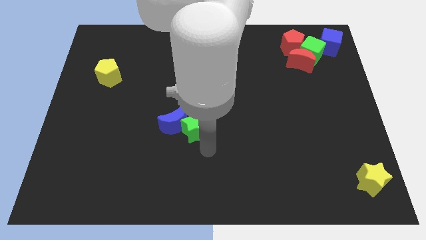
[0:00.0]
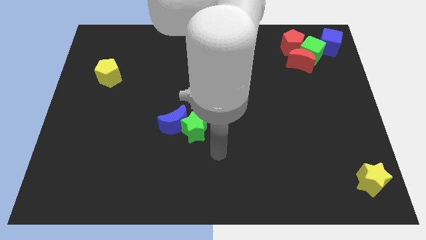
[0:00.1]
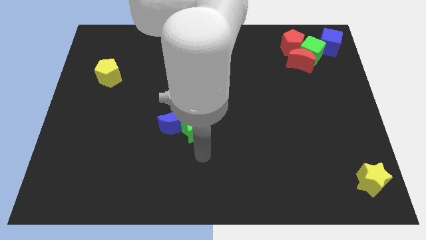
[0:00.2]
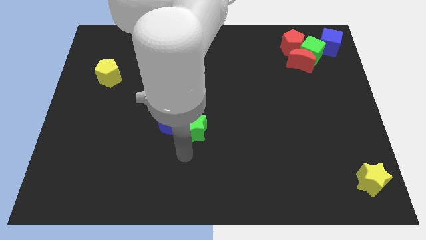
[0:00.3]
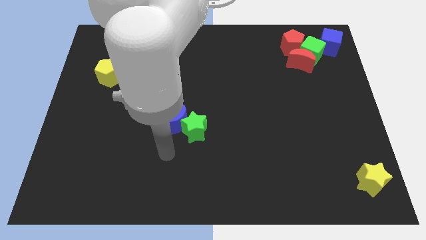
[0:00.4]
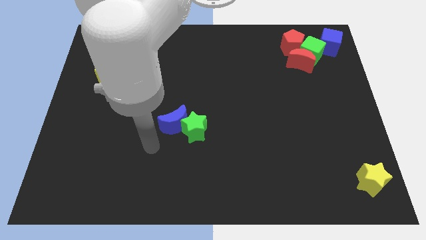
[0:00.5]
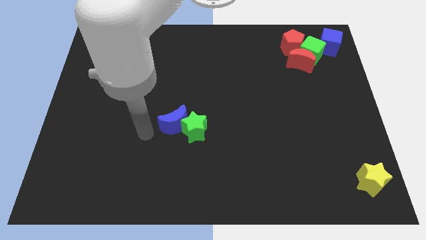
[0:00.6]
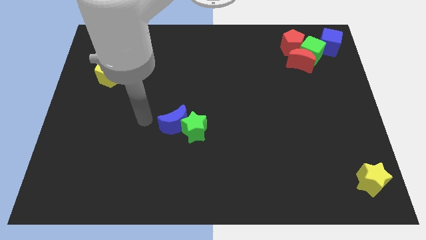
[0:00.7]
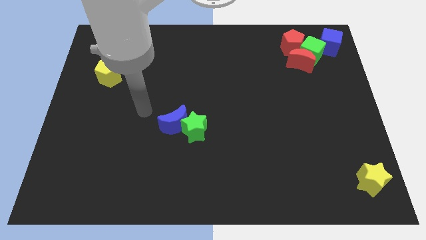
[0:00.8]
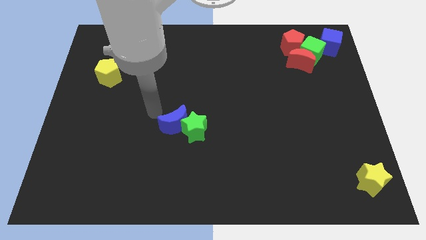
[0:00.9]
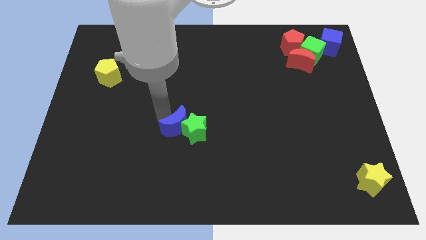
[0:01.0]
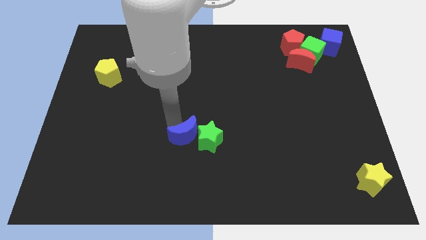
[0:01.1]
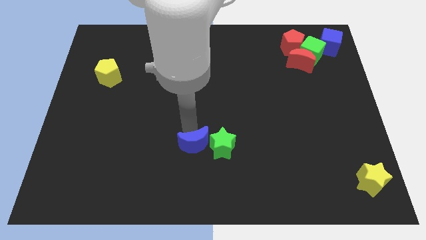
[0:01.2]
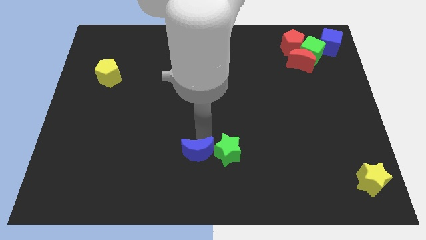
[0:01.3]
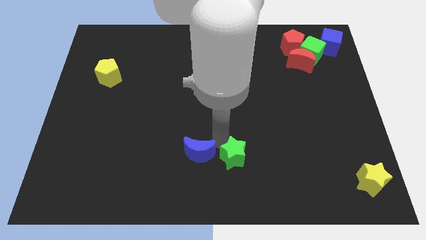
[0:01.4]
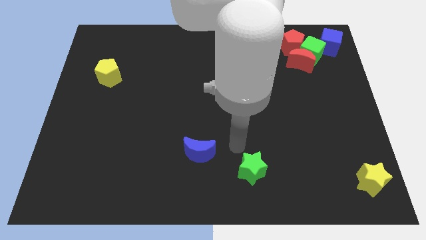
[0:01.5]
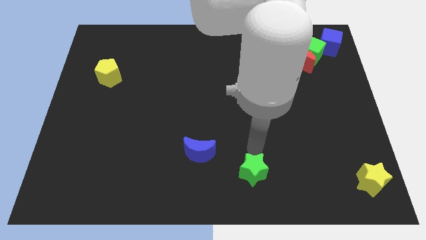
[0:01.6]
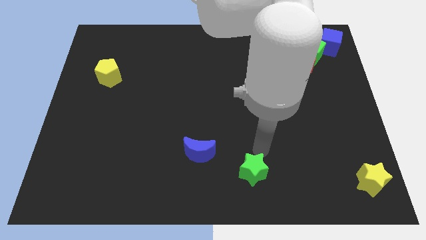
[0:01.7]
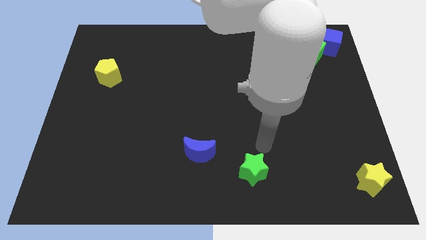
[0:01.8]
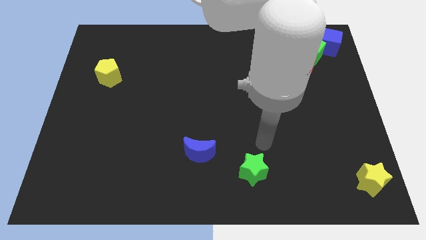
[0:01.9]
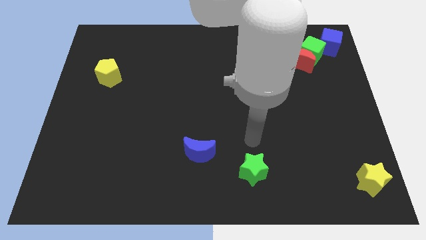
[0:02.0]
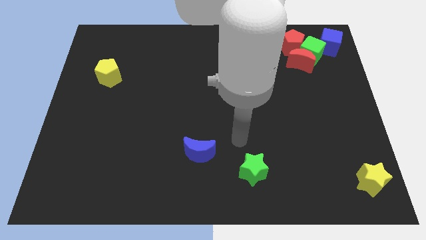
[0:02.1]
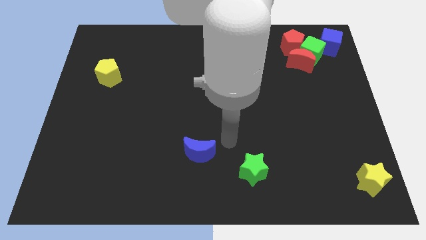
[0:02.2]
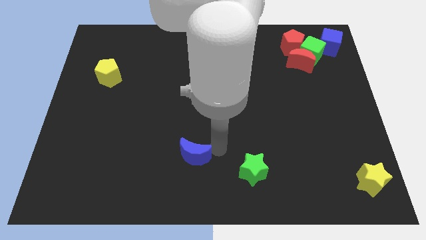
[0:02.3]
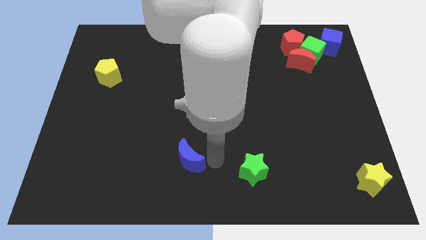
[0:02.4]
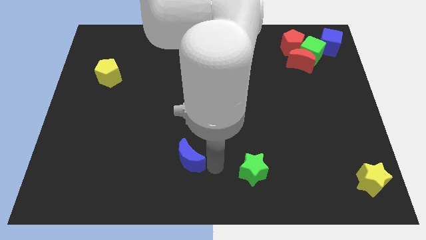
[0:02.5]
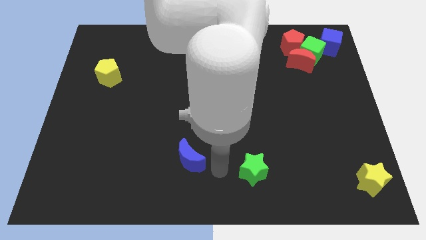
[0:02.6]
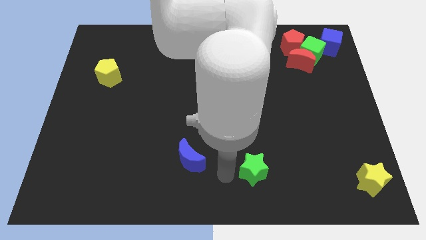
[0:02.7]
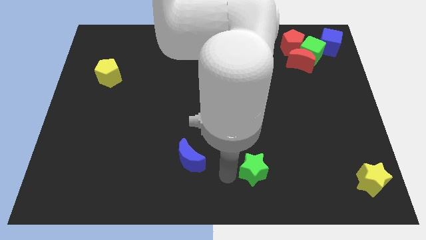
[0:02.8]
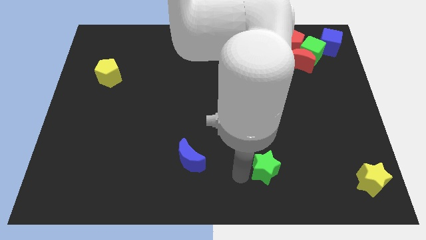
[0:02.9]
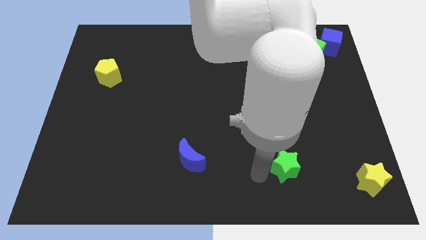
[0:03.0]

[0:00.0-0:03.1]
move the green star away from the blue moon

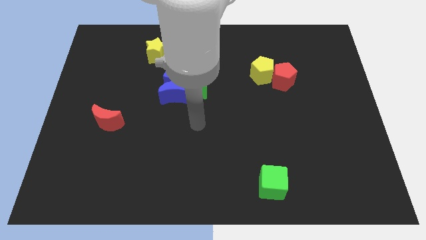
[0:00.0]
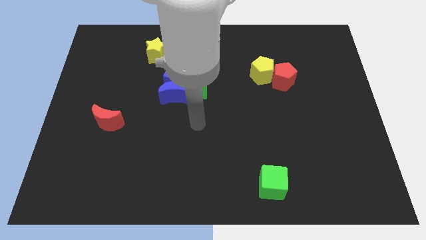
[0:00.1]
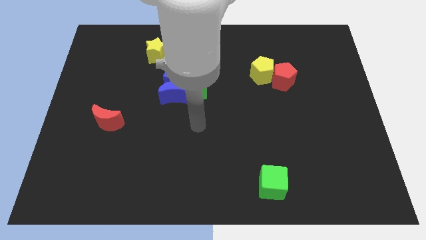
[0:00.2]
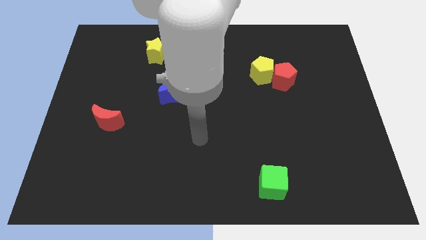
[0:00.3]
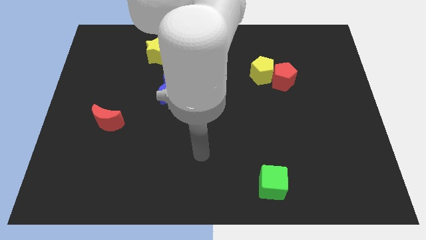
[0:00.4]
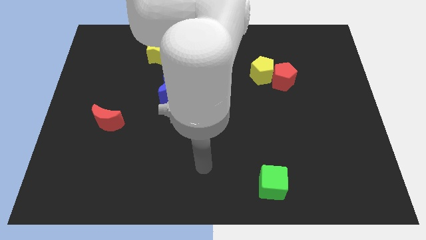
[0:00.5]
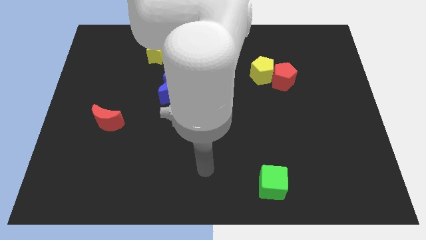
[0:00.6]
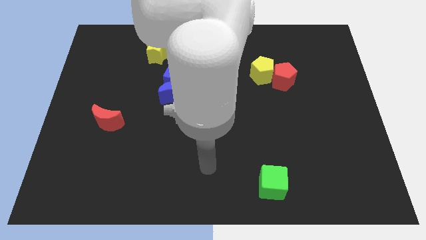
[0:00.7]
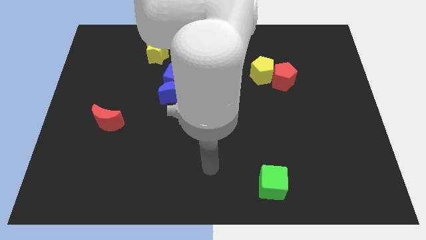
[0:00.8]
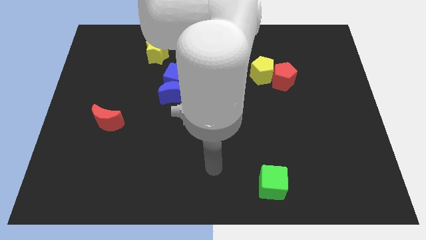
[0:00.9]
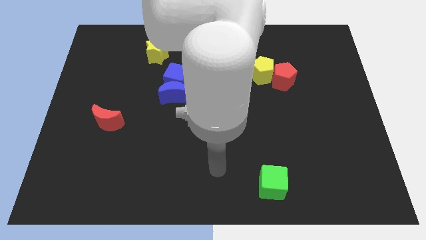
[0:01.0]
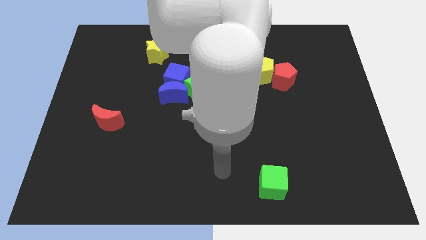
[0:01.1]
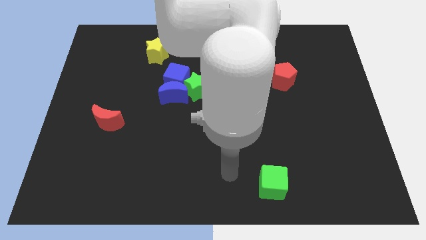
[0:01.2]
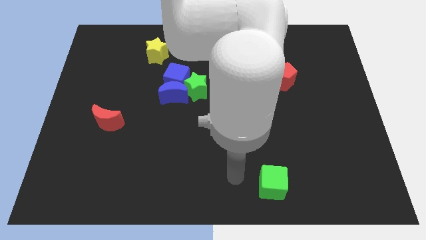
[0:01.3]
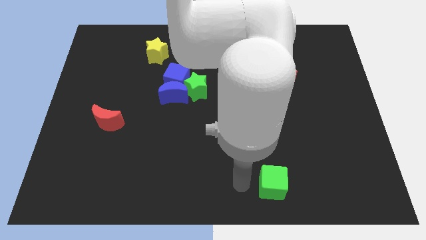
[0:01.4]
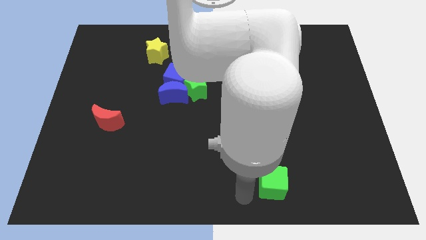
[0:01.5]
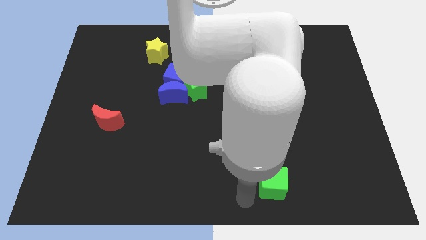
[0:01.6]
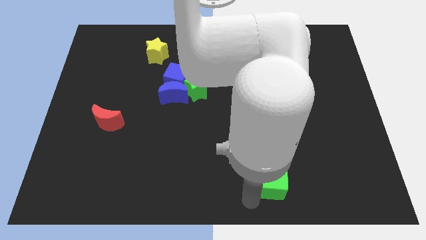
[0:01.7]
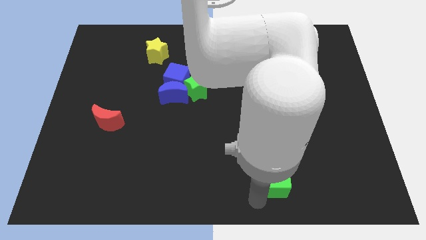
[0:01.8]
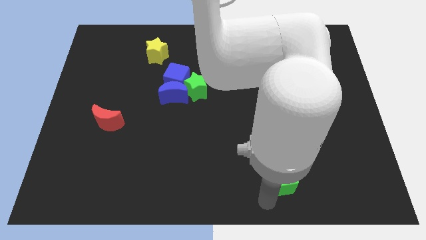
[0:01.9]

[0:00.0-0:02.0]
move the arm to the bottom of the green cube

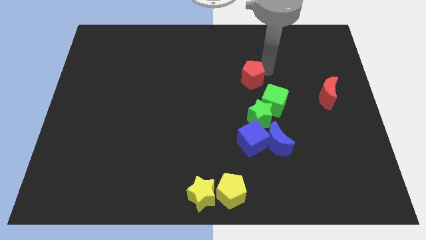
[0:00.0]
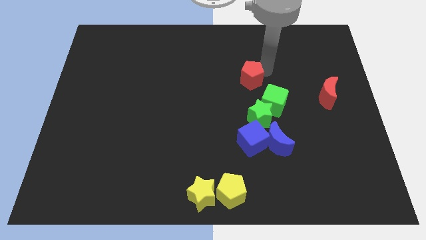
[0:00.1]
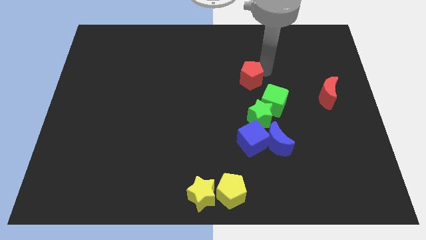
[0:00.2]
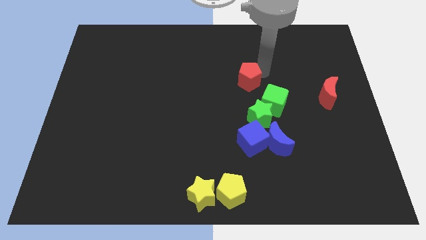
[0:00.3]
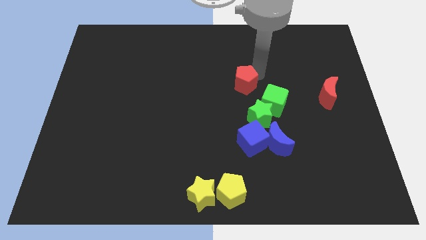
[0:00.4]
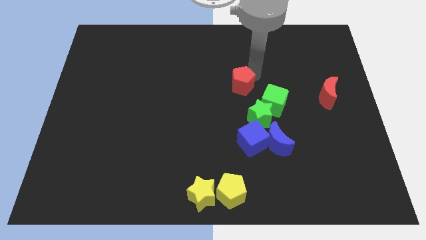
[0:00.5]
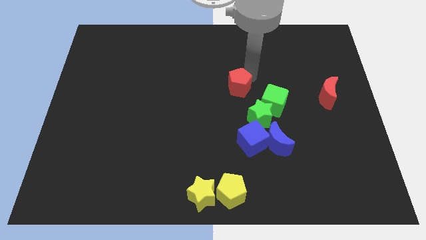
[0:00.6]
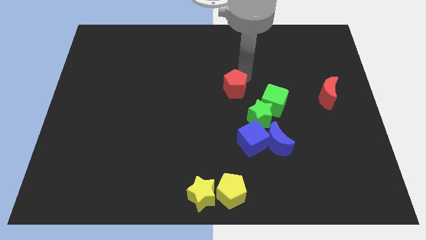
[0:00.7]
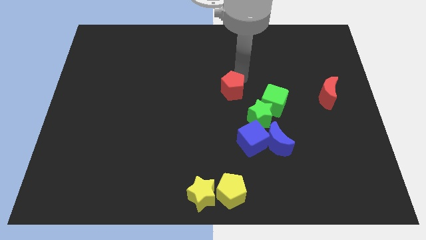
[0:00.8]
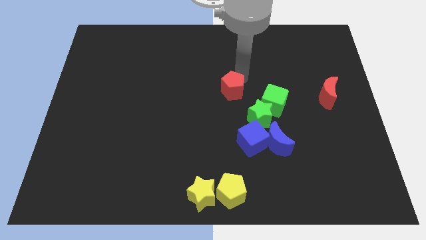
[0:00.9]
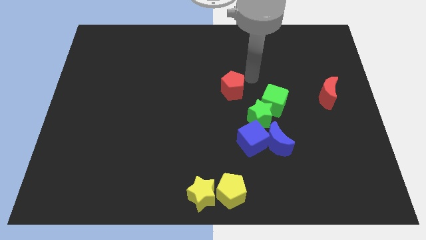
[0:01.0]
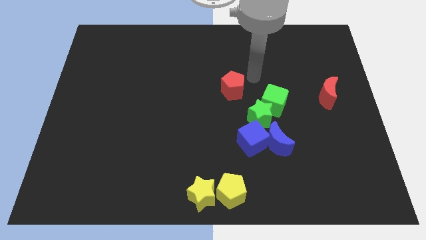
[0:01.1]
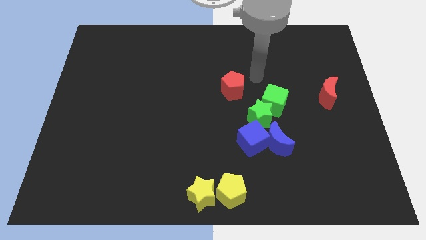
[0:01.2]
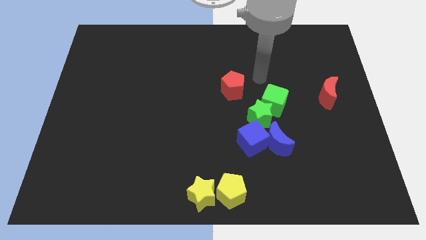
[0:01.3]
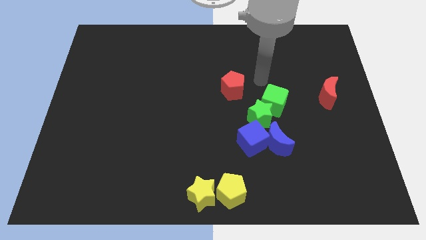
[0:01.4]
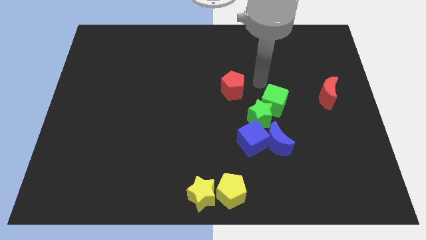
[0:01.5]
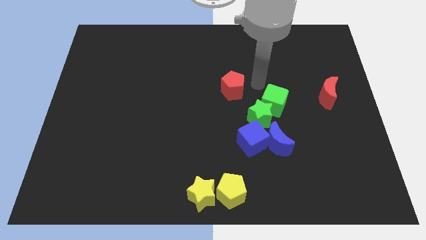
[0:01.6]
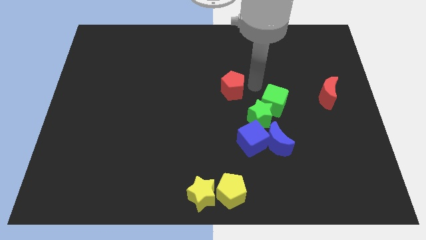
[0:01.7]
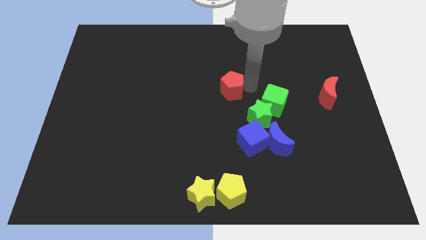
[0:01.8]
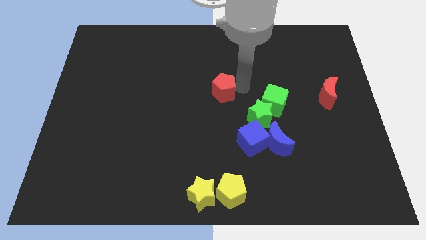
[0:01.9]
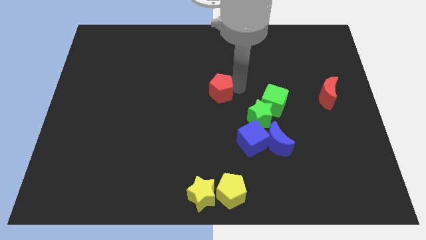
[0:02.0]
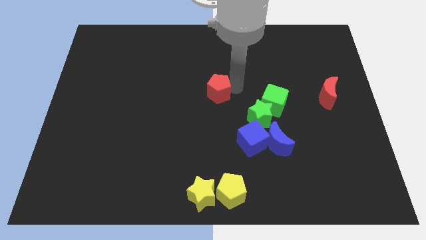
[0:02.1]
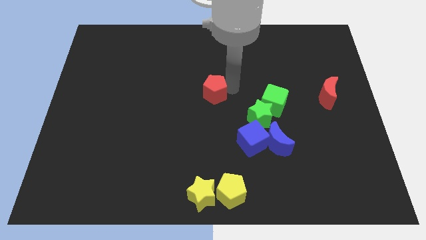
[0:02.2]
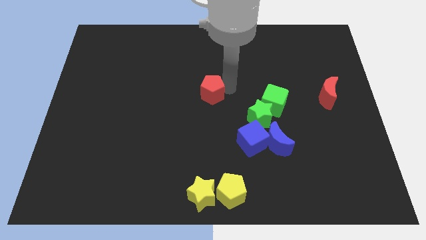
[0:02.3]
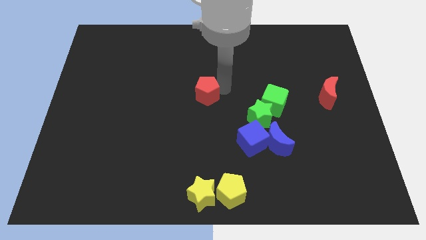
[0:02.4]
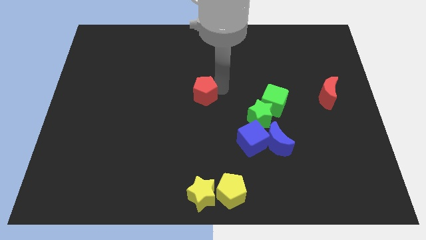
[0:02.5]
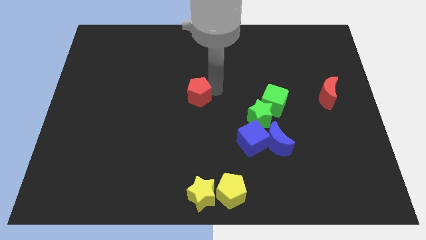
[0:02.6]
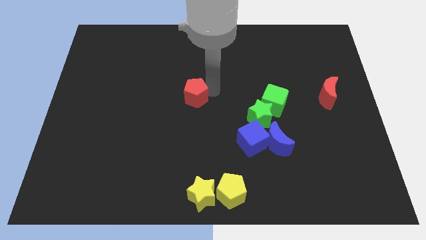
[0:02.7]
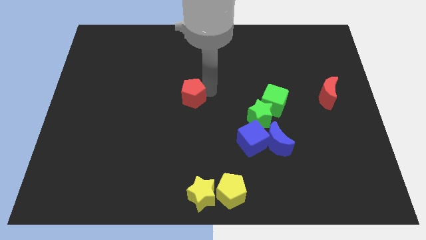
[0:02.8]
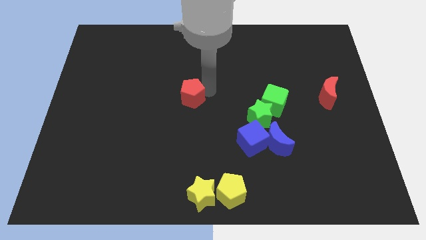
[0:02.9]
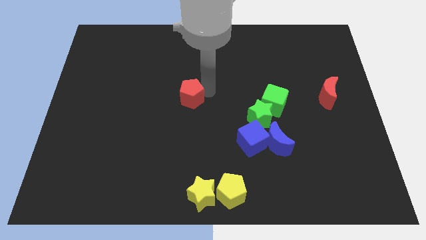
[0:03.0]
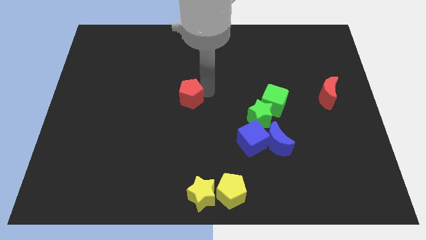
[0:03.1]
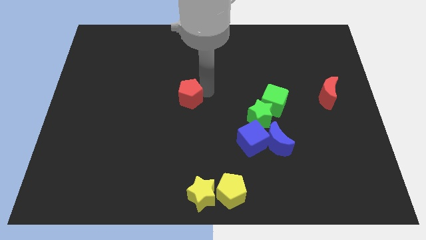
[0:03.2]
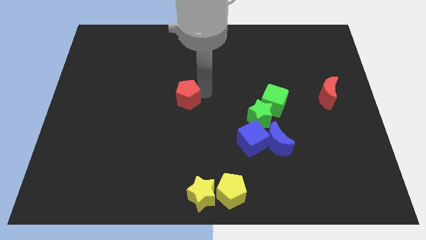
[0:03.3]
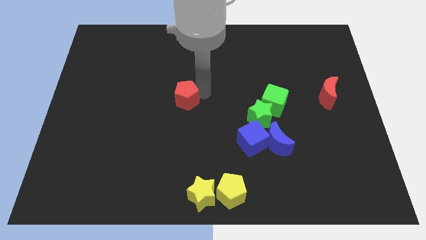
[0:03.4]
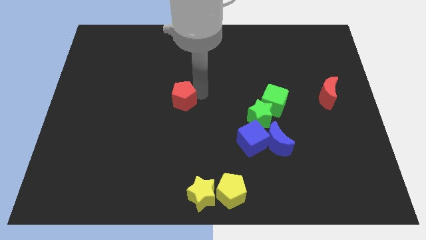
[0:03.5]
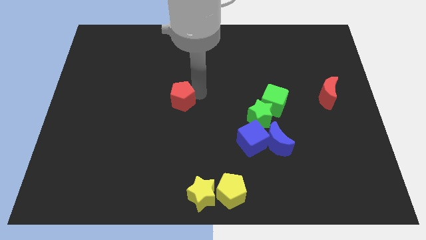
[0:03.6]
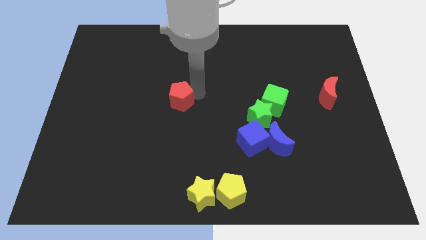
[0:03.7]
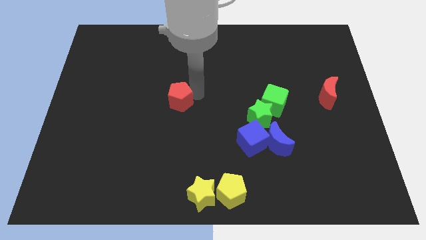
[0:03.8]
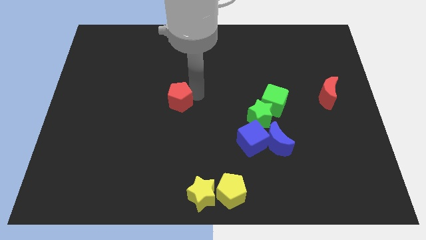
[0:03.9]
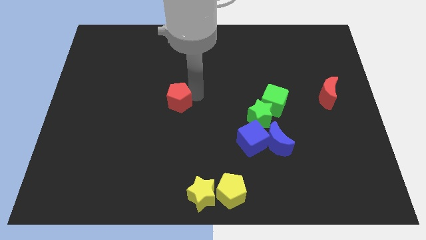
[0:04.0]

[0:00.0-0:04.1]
push the red pentagon to the middle of the board
